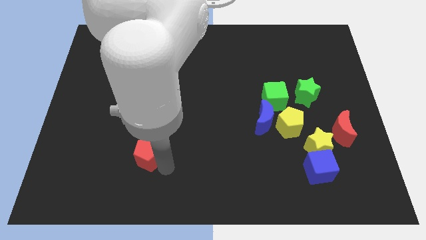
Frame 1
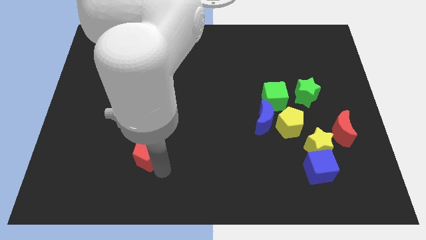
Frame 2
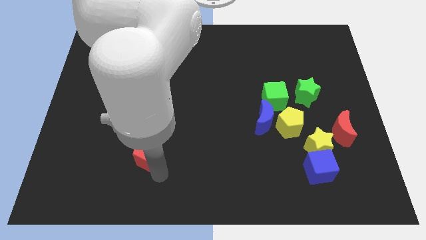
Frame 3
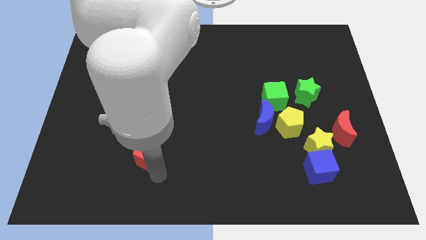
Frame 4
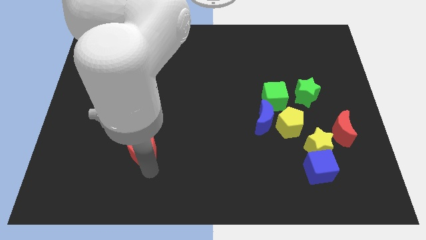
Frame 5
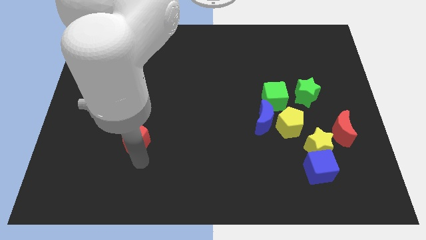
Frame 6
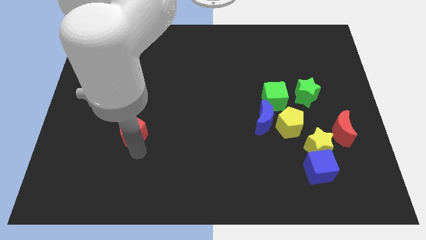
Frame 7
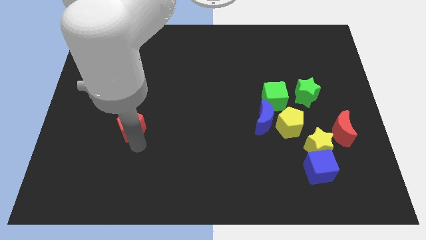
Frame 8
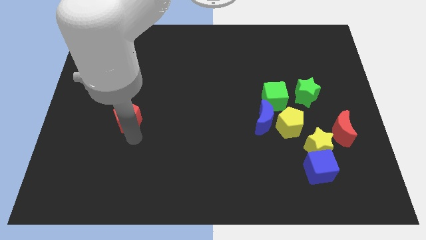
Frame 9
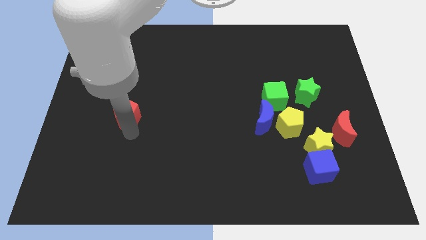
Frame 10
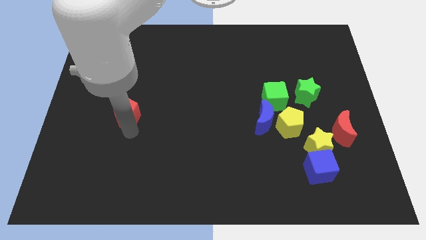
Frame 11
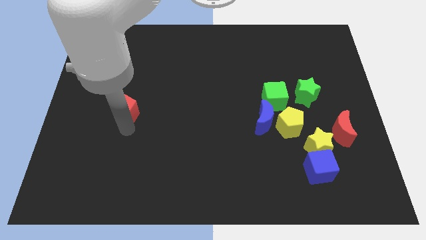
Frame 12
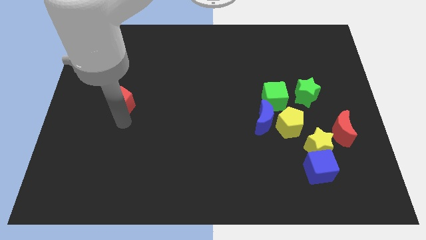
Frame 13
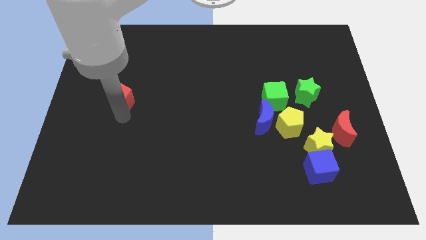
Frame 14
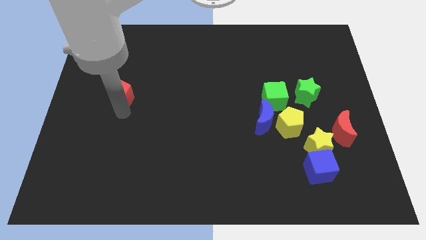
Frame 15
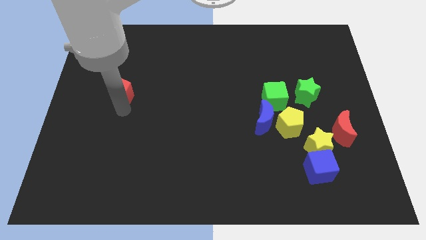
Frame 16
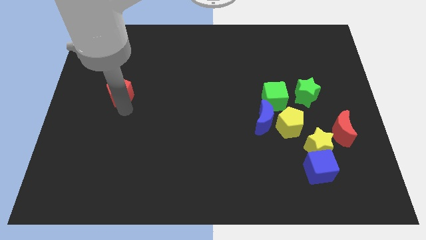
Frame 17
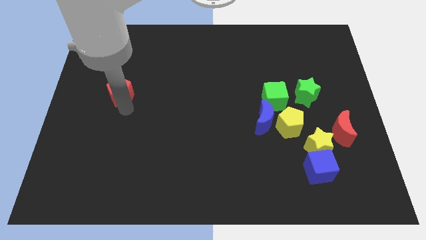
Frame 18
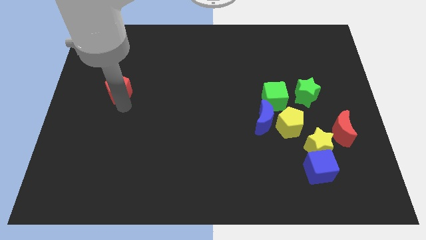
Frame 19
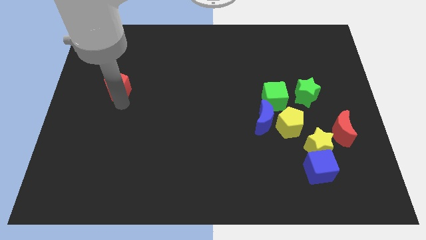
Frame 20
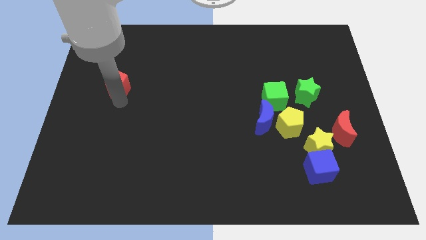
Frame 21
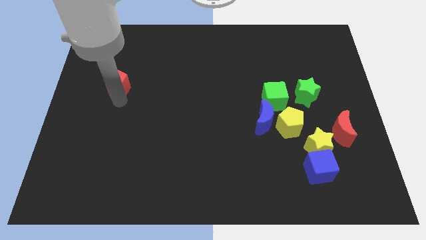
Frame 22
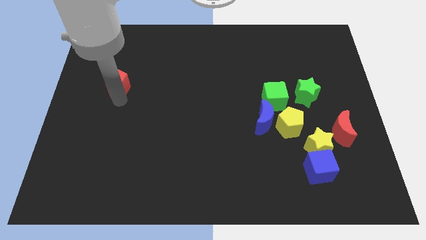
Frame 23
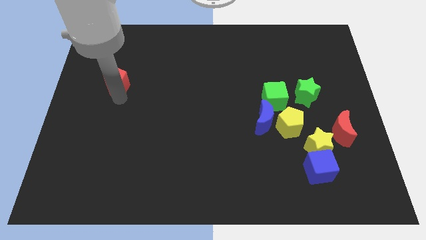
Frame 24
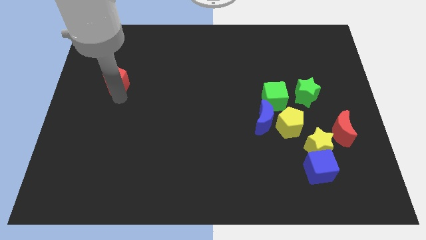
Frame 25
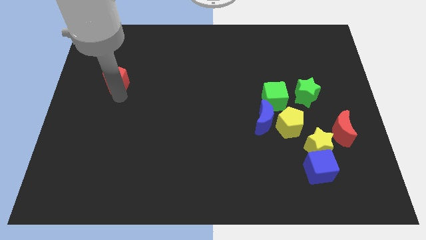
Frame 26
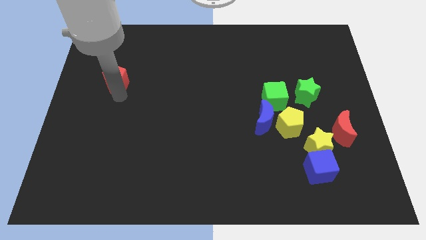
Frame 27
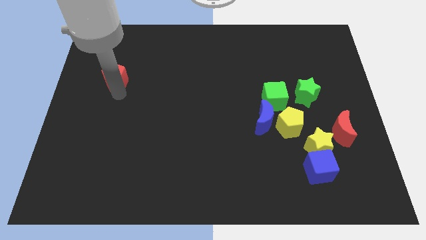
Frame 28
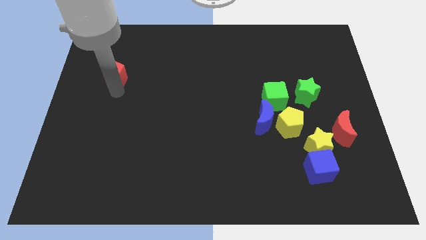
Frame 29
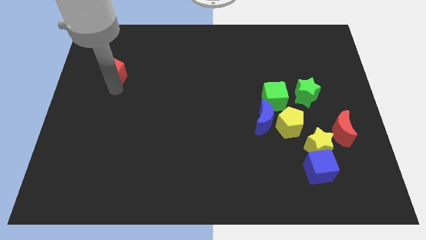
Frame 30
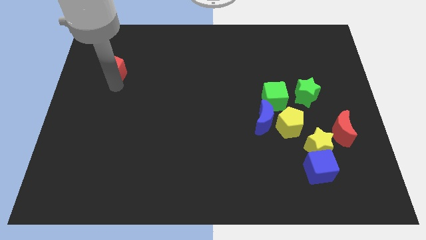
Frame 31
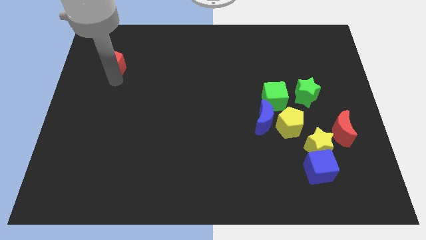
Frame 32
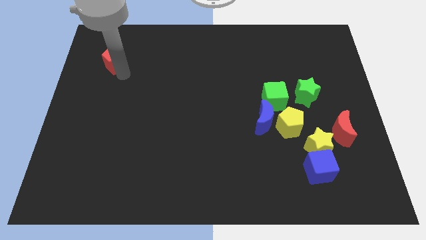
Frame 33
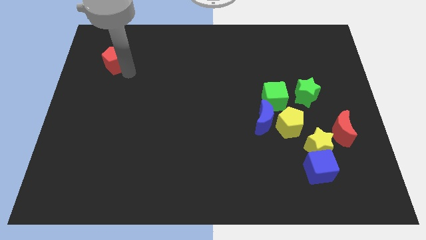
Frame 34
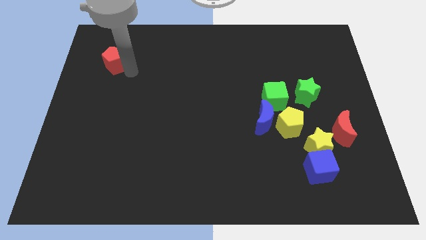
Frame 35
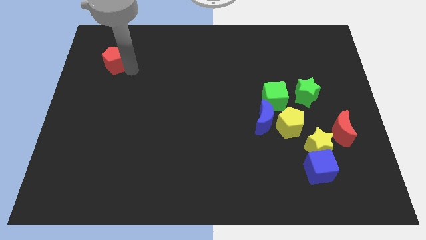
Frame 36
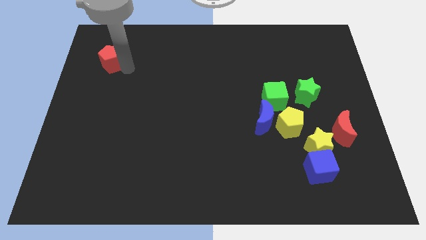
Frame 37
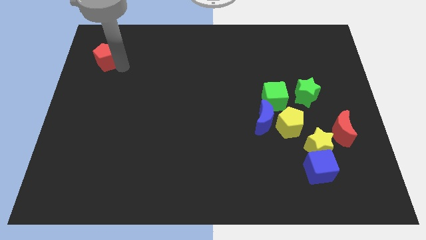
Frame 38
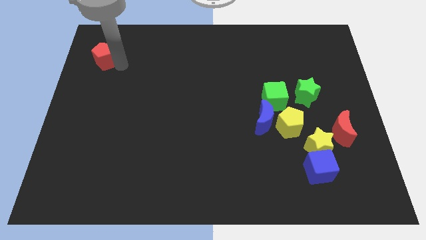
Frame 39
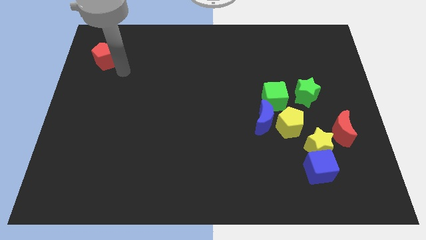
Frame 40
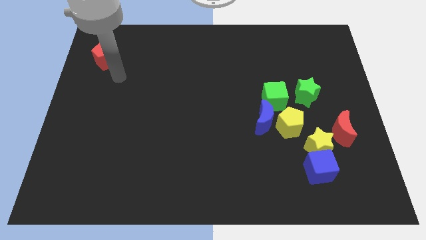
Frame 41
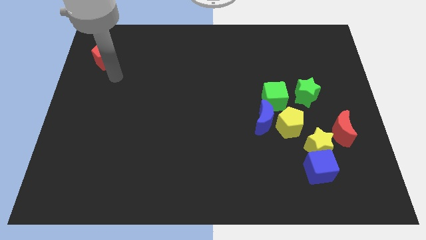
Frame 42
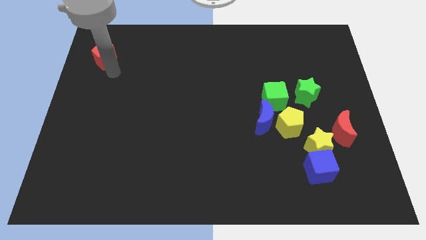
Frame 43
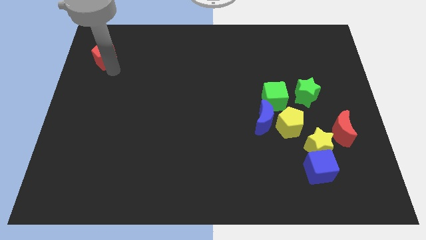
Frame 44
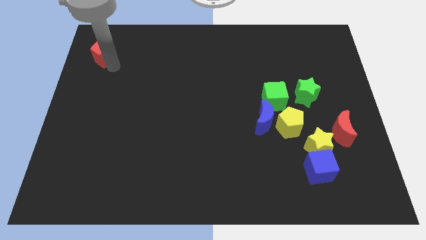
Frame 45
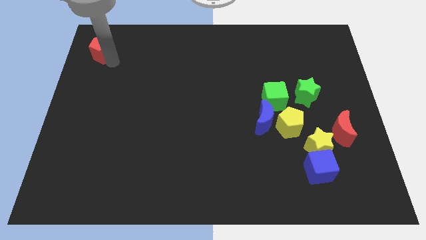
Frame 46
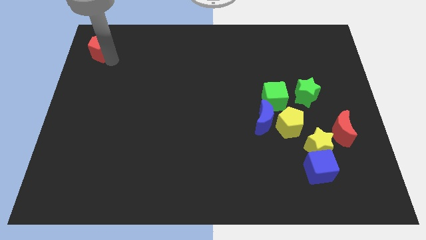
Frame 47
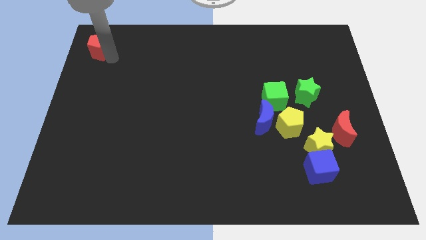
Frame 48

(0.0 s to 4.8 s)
push the red pentagon towards the top left to the board

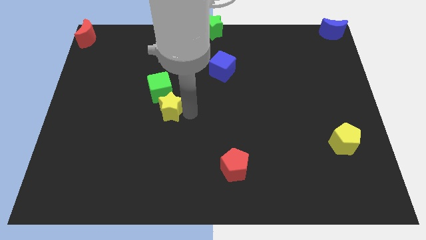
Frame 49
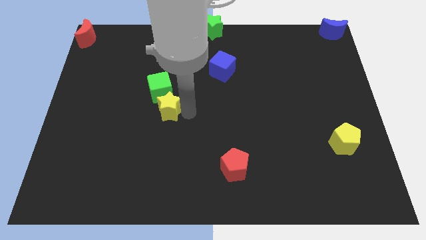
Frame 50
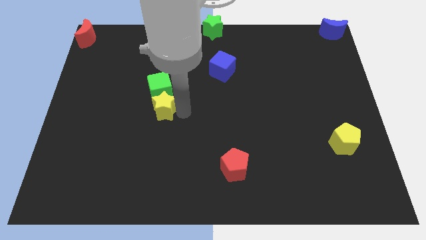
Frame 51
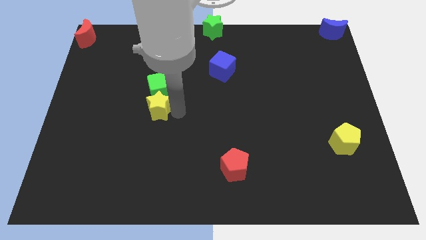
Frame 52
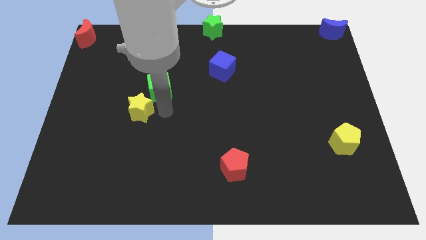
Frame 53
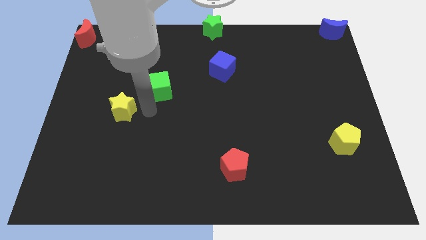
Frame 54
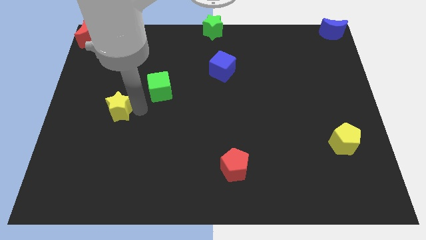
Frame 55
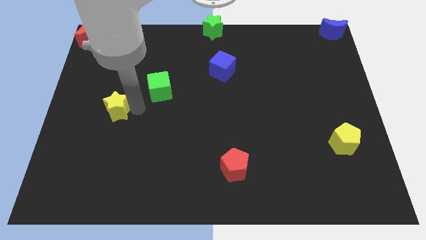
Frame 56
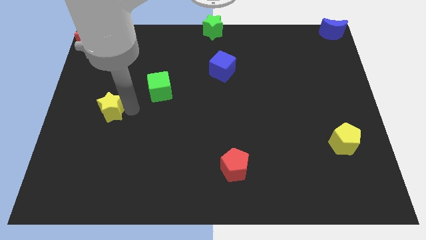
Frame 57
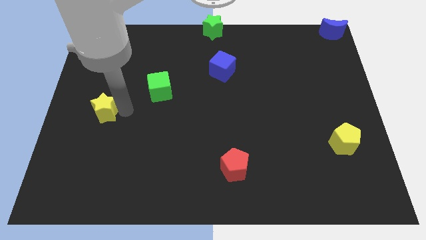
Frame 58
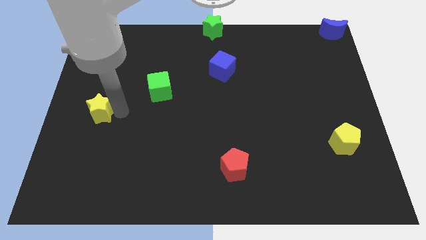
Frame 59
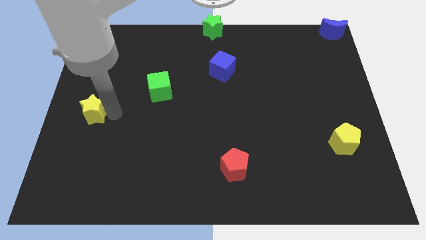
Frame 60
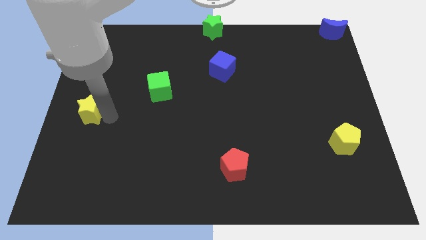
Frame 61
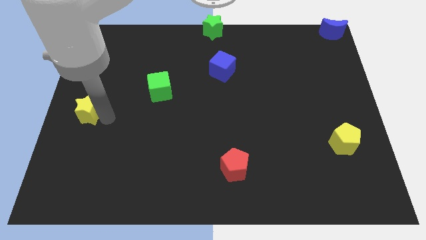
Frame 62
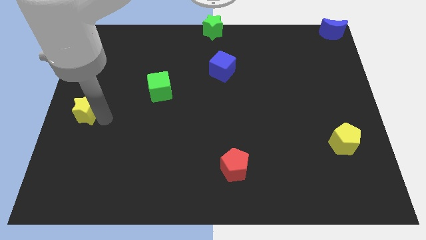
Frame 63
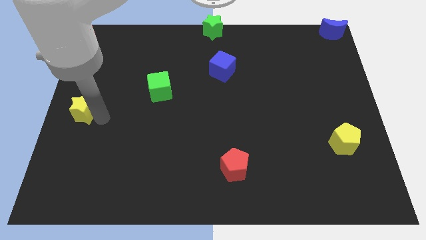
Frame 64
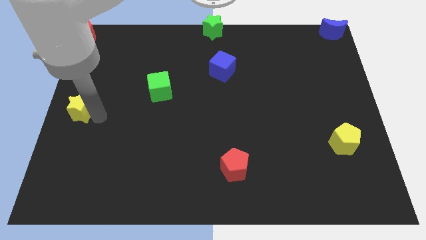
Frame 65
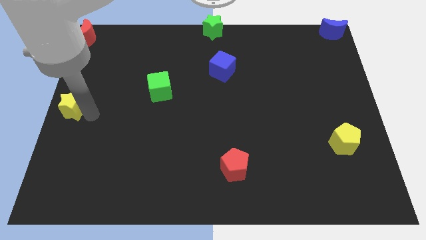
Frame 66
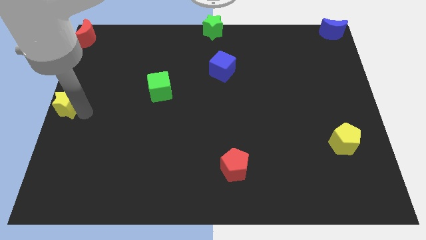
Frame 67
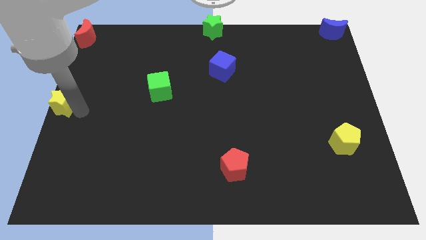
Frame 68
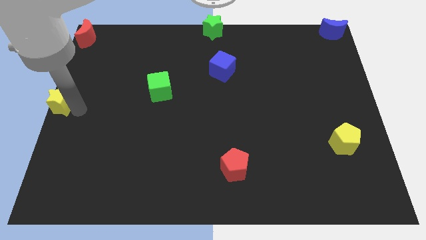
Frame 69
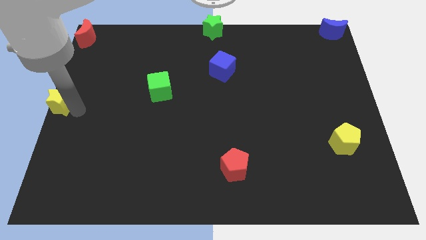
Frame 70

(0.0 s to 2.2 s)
push the yellow star towards the left center of the board

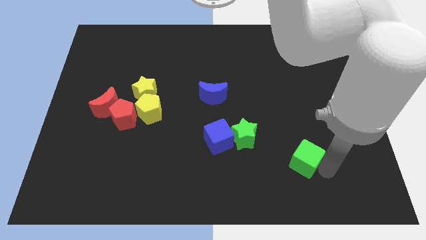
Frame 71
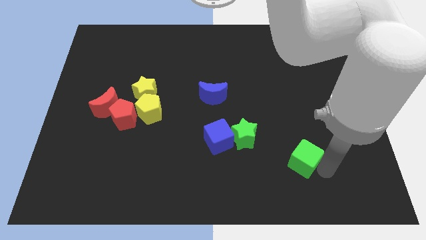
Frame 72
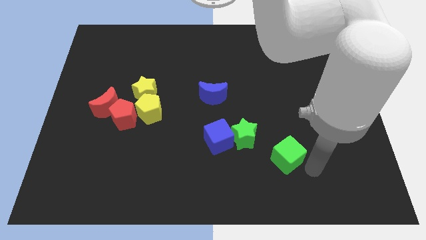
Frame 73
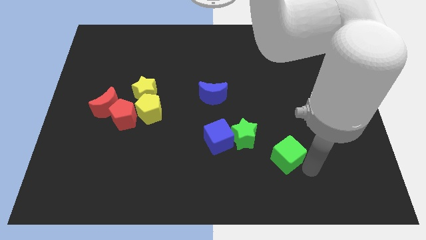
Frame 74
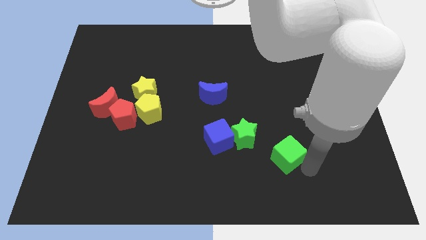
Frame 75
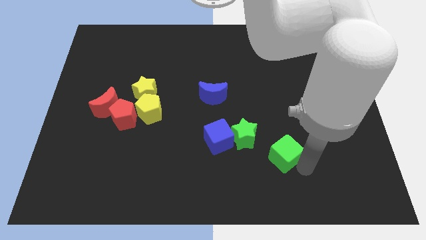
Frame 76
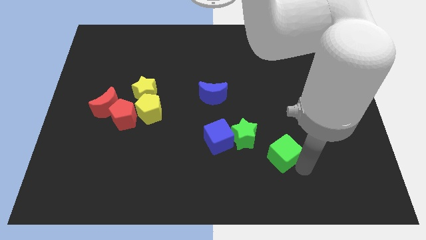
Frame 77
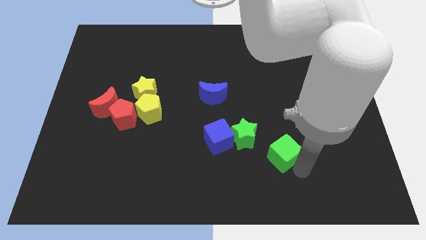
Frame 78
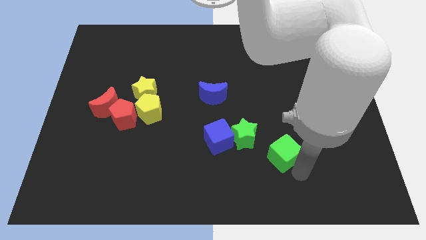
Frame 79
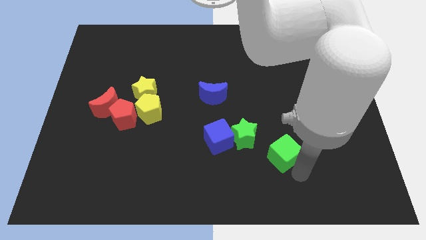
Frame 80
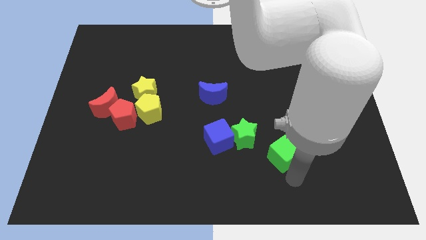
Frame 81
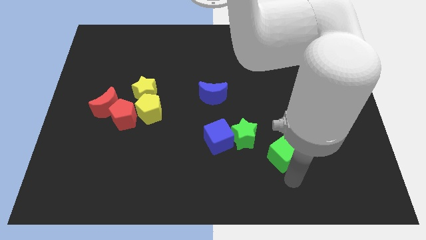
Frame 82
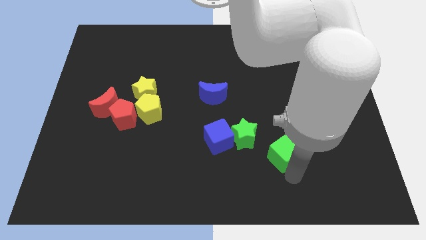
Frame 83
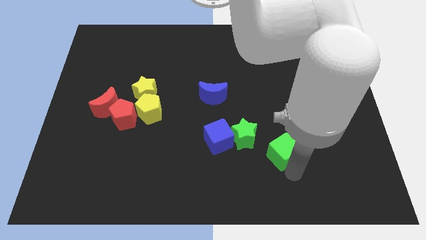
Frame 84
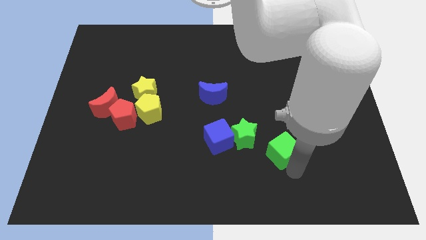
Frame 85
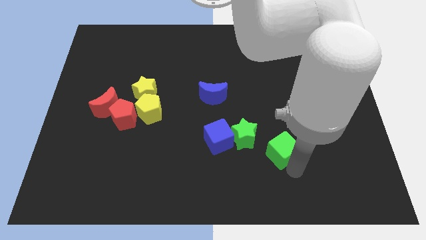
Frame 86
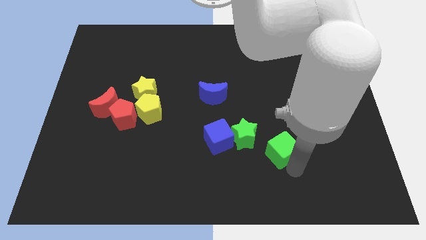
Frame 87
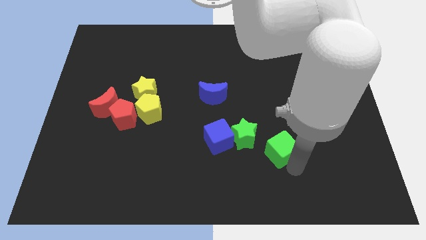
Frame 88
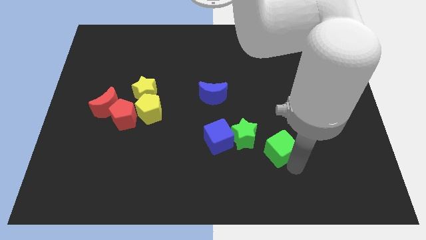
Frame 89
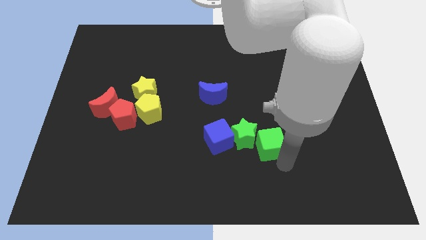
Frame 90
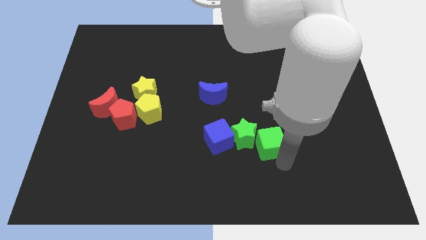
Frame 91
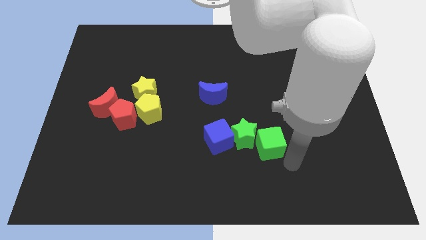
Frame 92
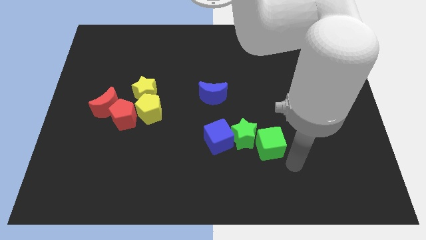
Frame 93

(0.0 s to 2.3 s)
push the green cube towards green star
